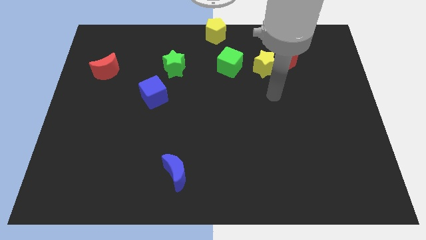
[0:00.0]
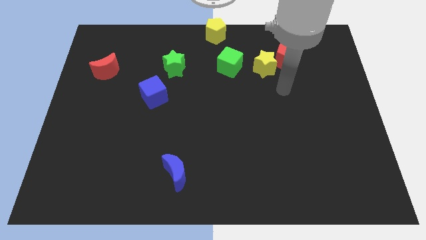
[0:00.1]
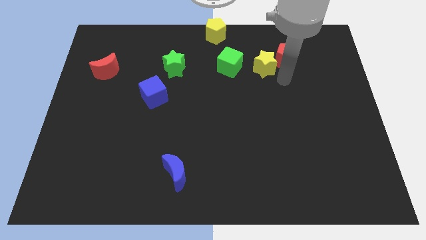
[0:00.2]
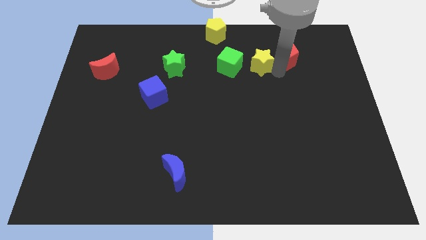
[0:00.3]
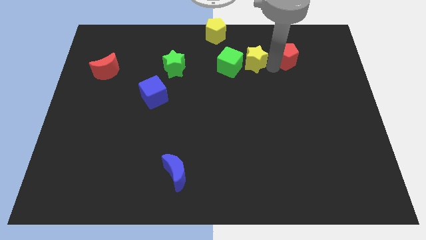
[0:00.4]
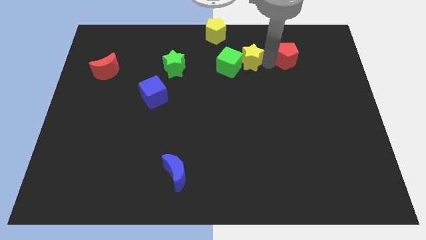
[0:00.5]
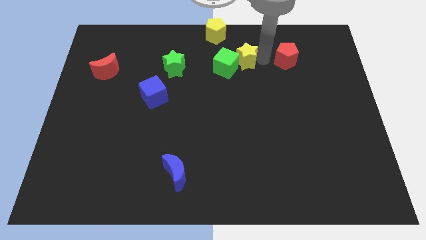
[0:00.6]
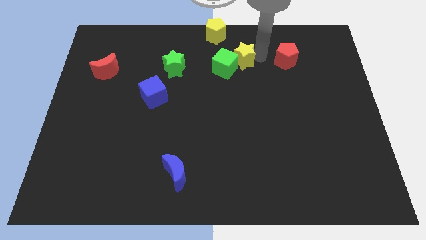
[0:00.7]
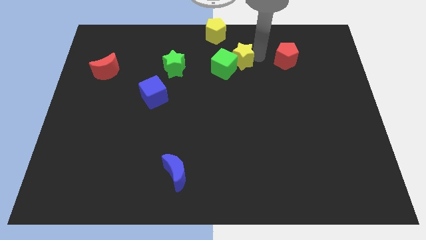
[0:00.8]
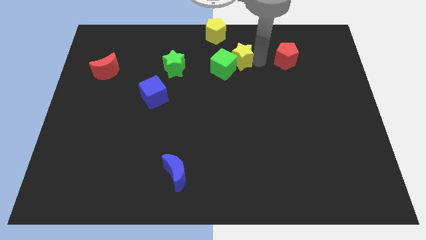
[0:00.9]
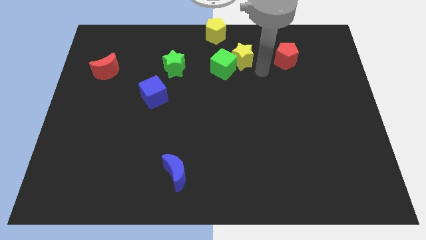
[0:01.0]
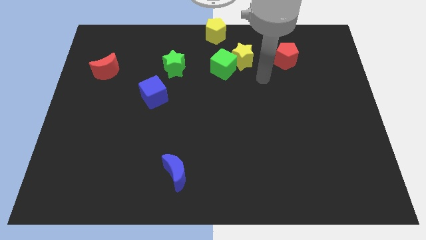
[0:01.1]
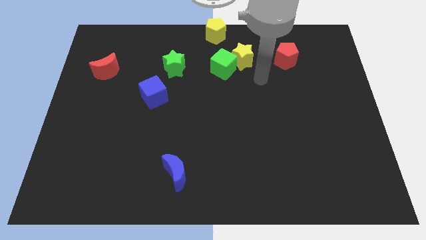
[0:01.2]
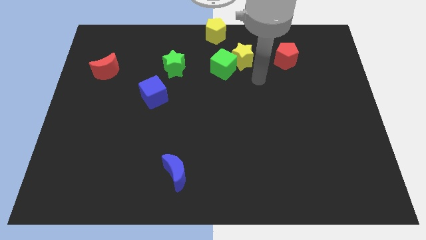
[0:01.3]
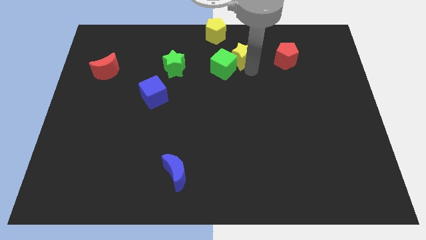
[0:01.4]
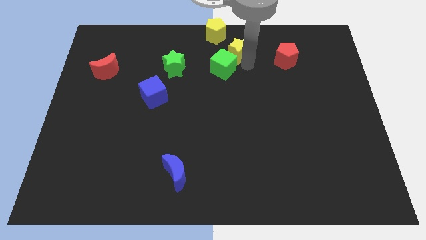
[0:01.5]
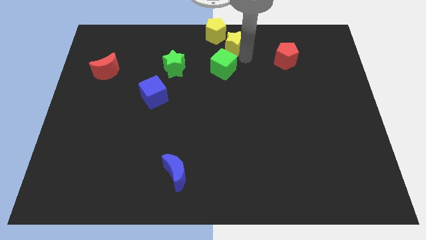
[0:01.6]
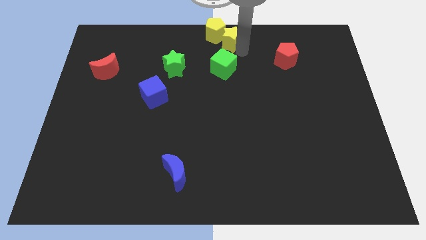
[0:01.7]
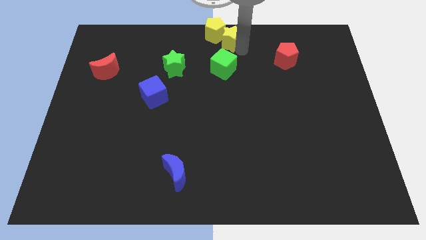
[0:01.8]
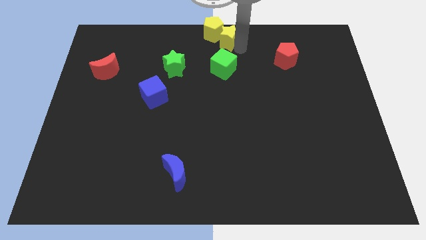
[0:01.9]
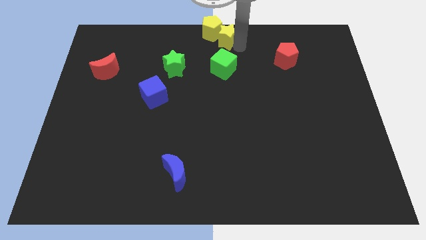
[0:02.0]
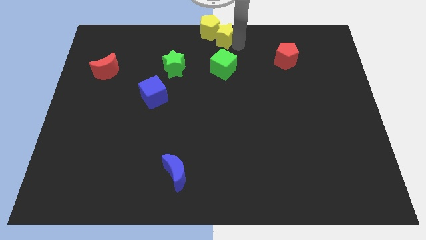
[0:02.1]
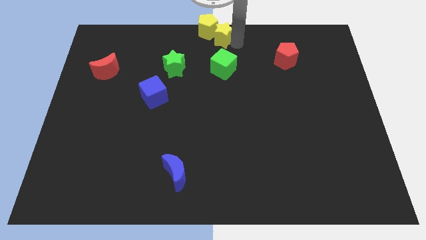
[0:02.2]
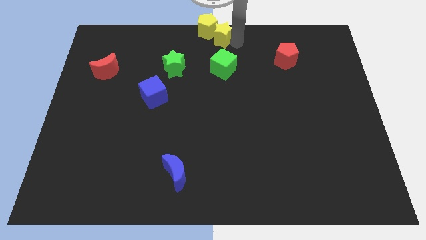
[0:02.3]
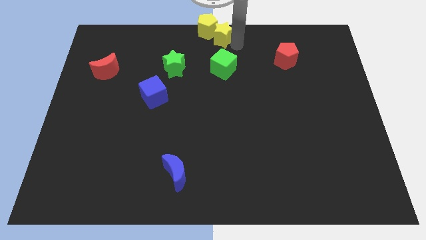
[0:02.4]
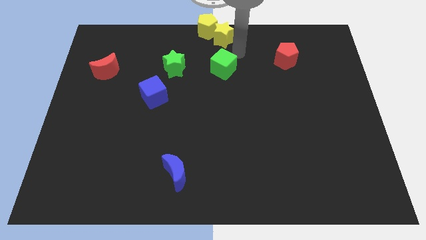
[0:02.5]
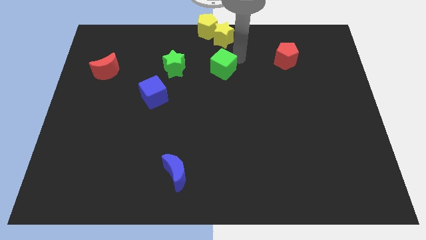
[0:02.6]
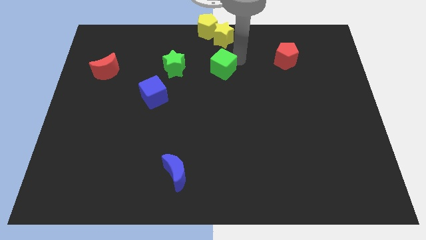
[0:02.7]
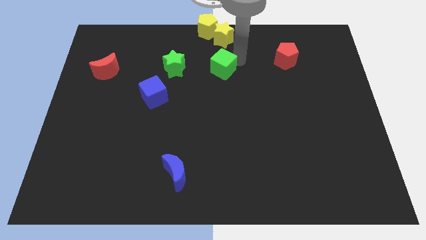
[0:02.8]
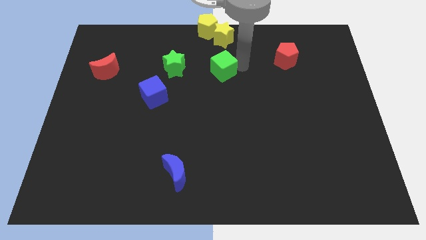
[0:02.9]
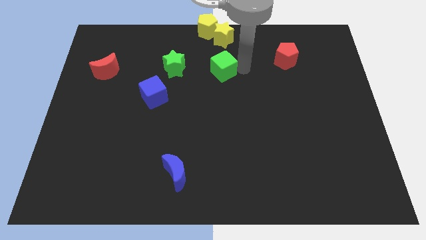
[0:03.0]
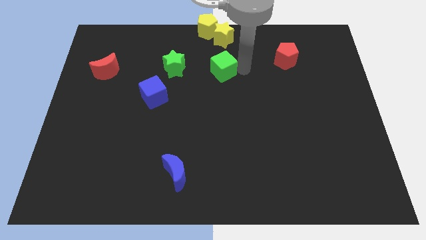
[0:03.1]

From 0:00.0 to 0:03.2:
move the yellow star into yellow pentagon

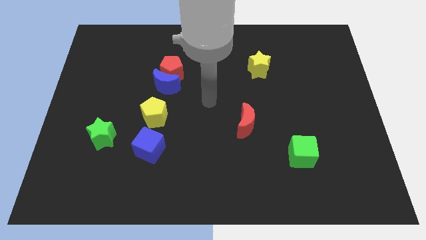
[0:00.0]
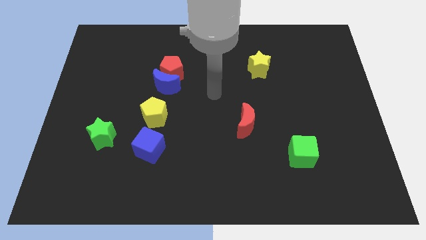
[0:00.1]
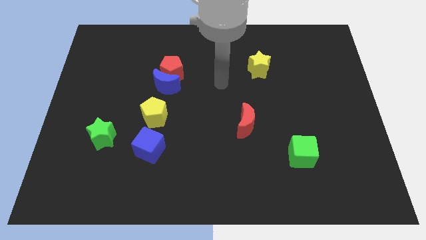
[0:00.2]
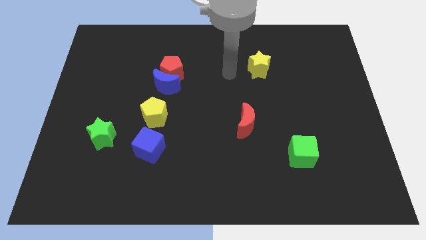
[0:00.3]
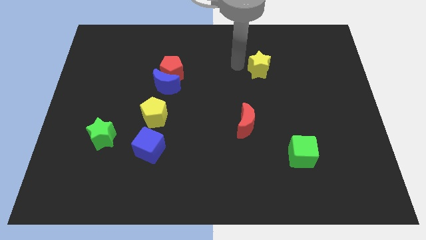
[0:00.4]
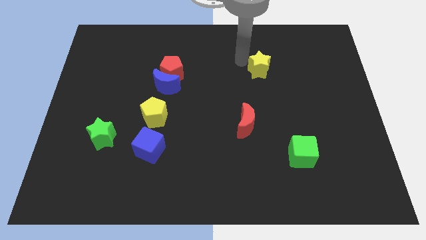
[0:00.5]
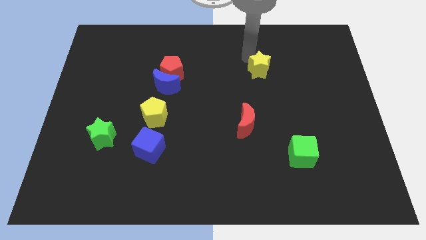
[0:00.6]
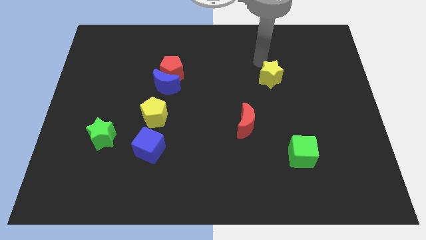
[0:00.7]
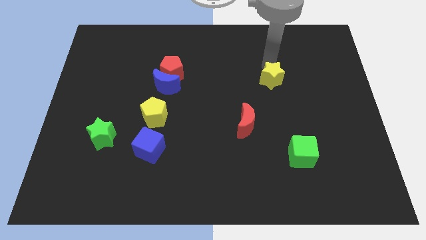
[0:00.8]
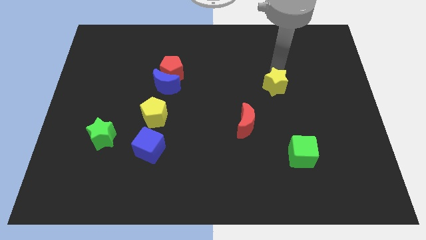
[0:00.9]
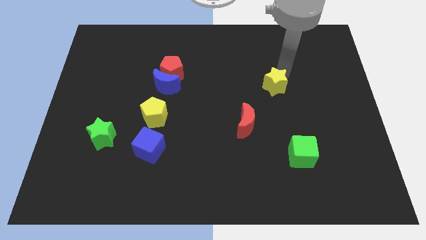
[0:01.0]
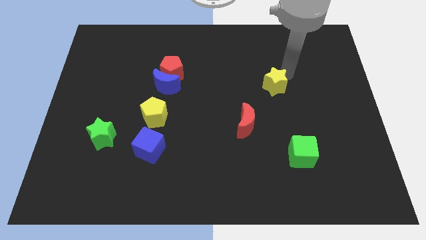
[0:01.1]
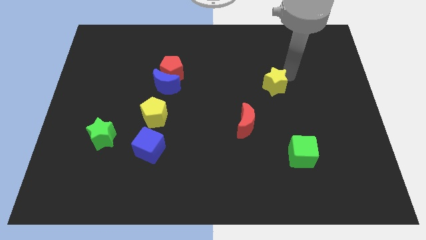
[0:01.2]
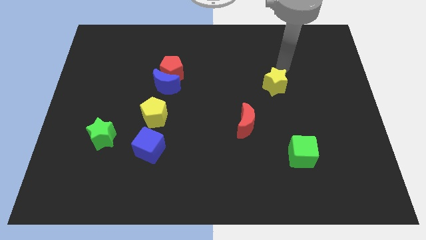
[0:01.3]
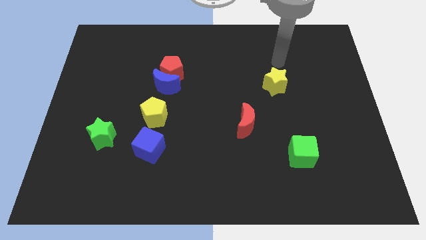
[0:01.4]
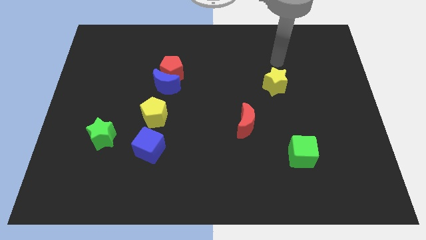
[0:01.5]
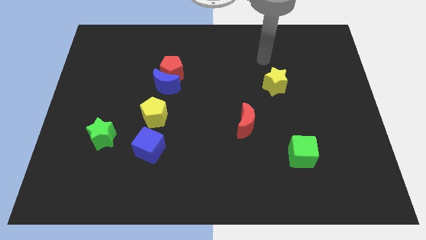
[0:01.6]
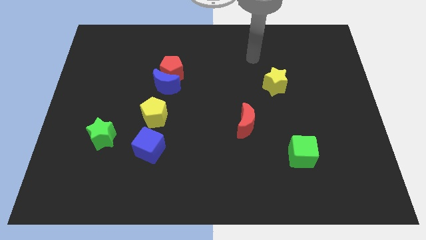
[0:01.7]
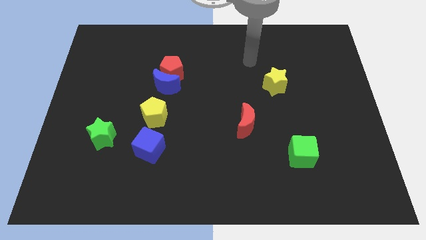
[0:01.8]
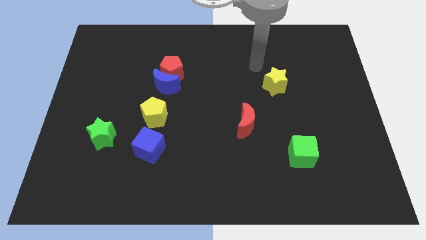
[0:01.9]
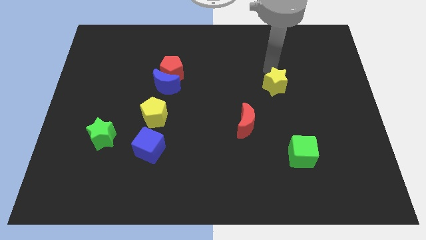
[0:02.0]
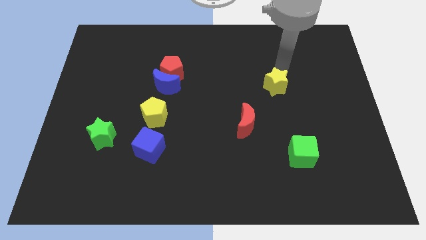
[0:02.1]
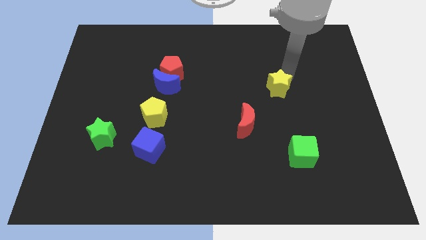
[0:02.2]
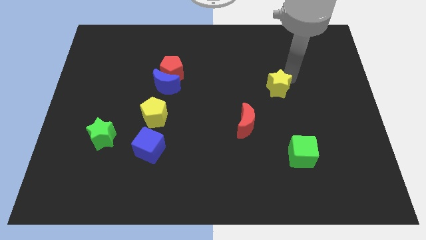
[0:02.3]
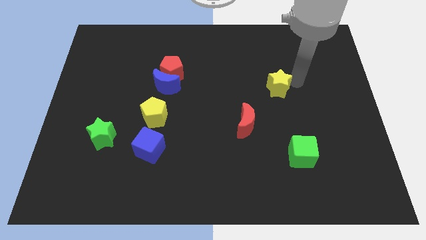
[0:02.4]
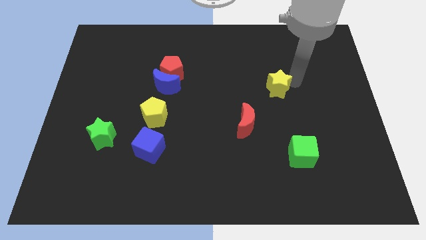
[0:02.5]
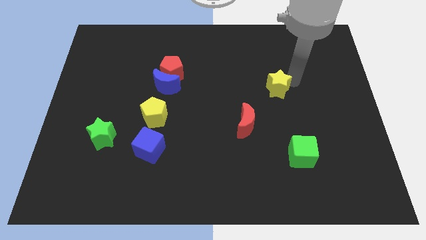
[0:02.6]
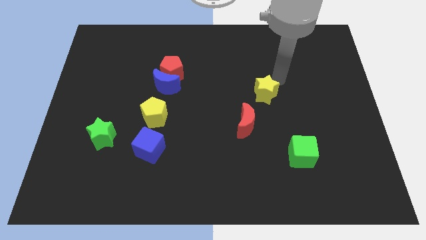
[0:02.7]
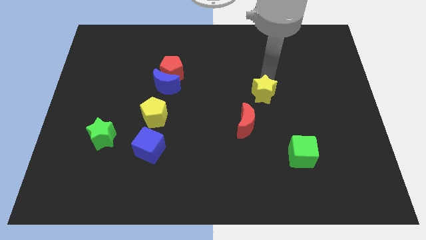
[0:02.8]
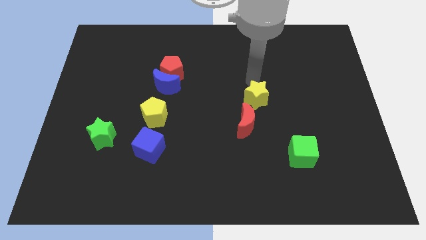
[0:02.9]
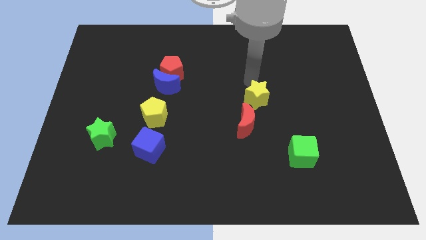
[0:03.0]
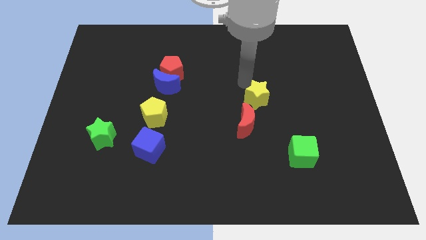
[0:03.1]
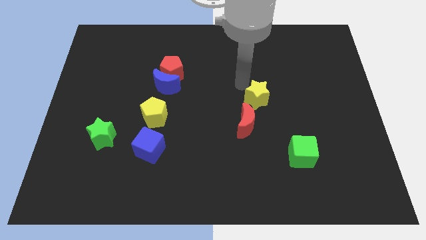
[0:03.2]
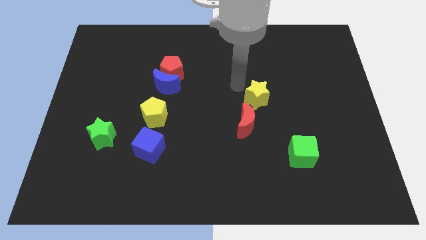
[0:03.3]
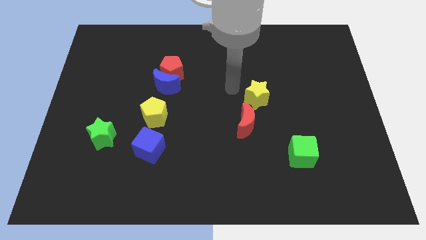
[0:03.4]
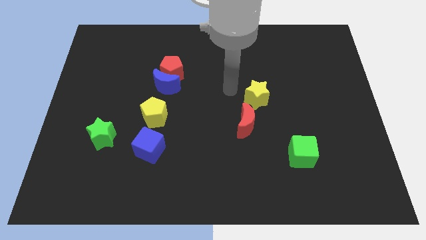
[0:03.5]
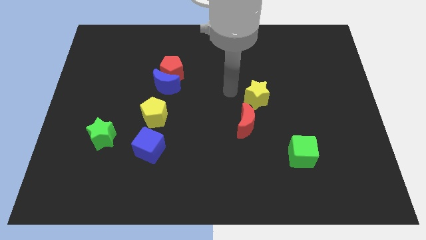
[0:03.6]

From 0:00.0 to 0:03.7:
move the yellow star close to the red crescent

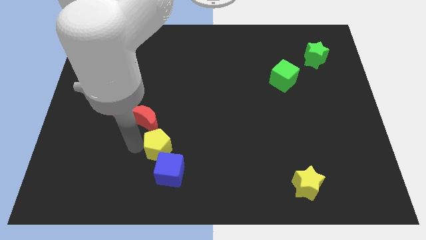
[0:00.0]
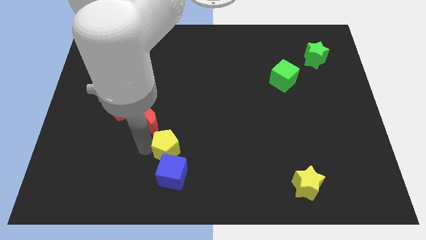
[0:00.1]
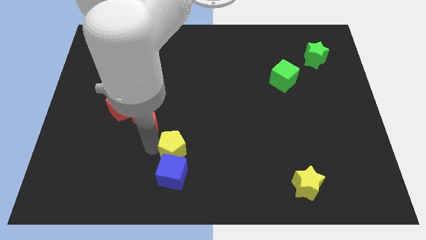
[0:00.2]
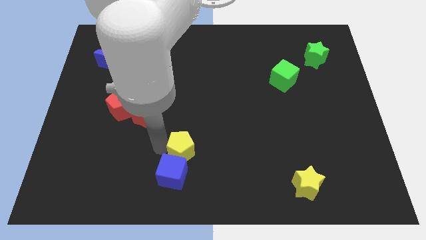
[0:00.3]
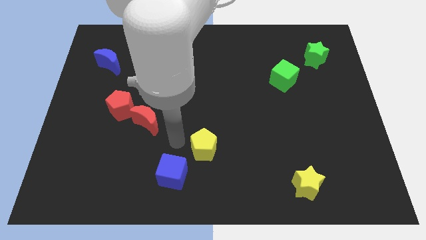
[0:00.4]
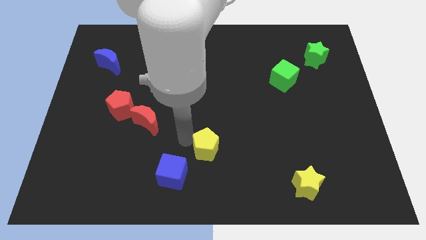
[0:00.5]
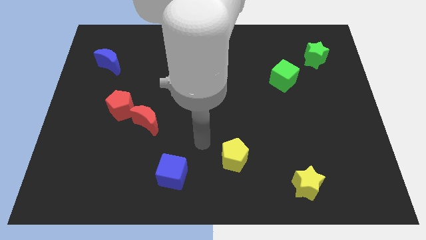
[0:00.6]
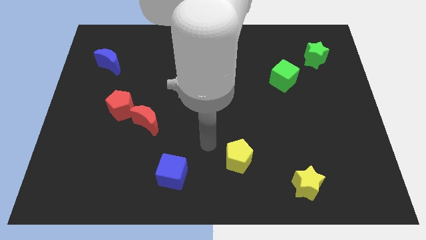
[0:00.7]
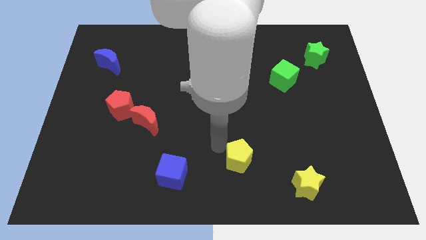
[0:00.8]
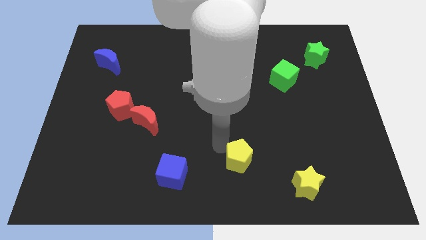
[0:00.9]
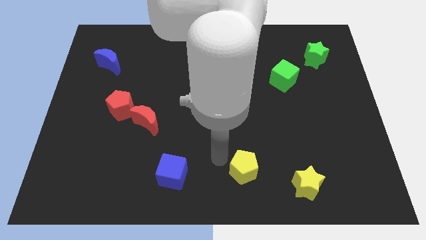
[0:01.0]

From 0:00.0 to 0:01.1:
place yellow pentagon to the right of blue cube

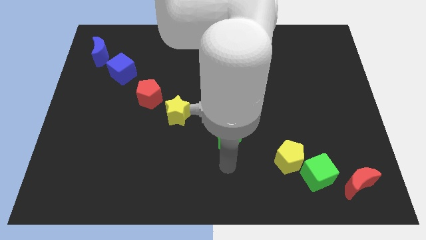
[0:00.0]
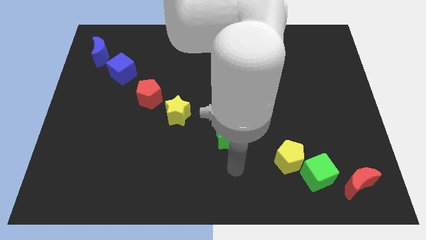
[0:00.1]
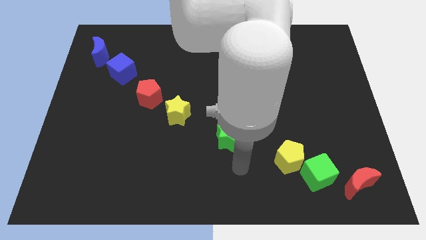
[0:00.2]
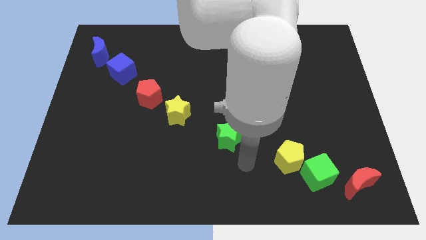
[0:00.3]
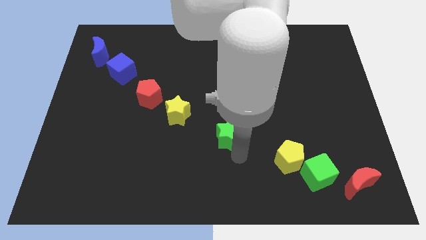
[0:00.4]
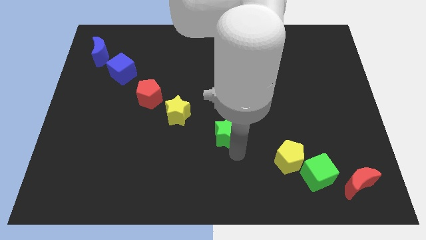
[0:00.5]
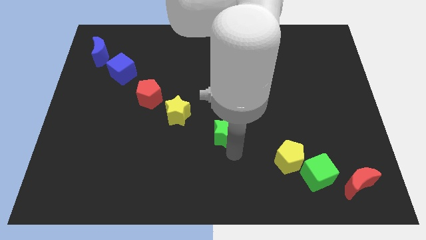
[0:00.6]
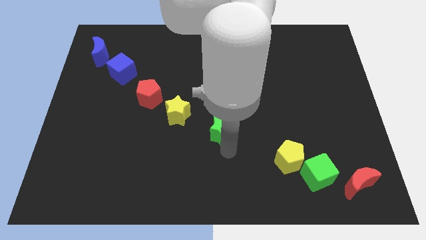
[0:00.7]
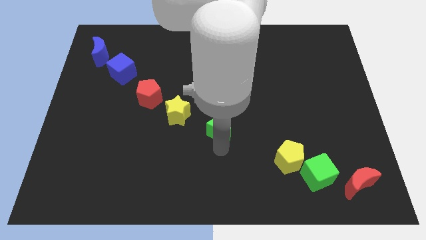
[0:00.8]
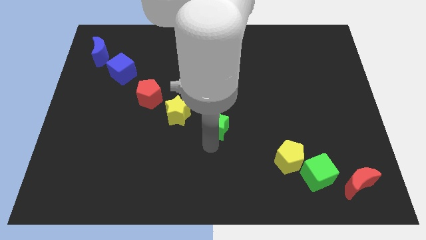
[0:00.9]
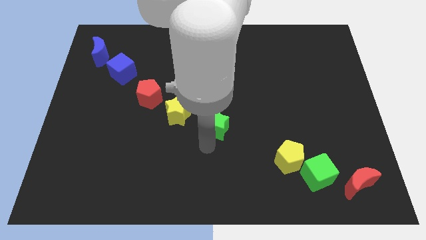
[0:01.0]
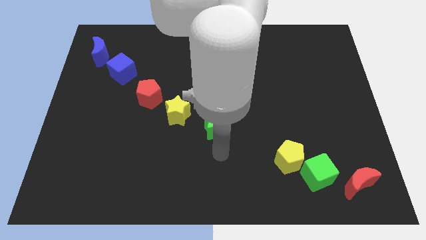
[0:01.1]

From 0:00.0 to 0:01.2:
move the green star to the center of board
